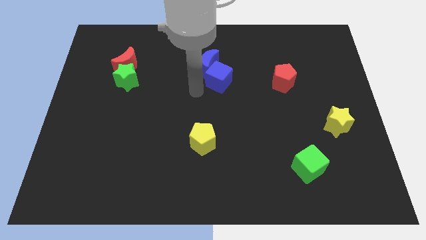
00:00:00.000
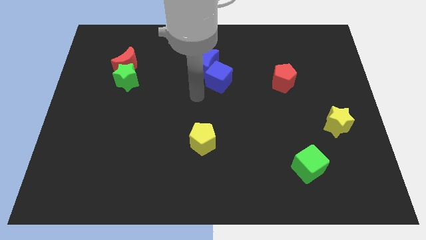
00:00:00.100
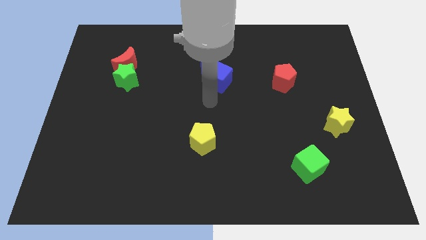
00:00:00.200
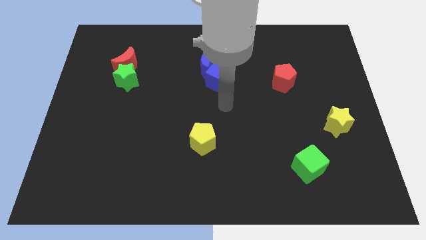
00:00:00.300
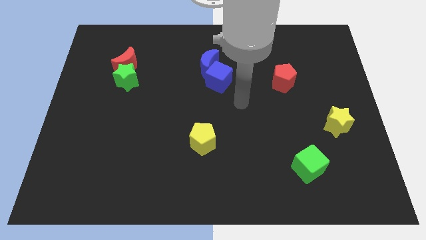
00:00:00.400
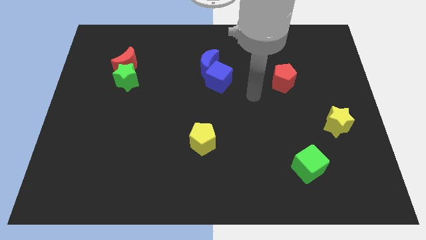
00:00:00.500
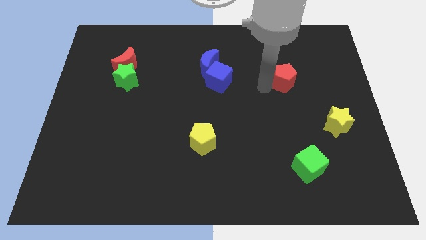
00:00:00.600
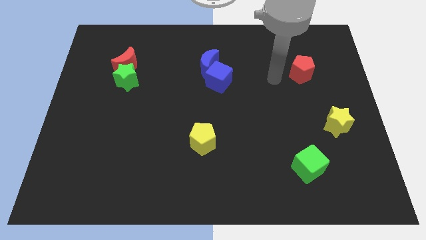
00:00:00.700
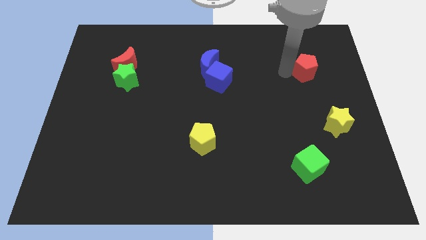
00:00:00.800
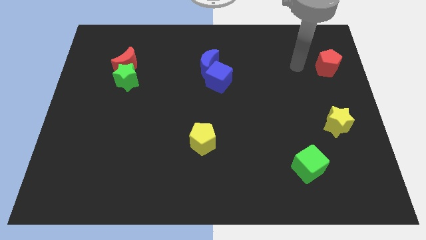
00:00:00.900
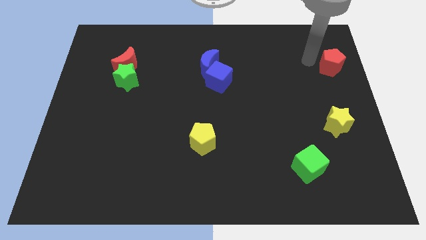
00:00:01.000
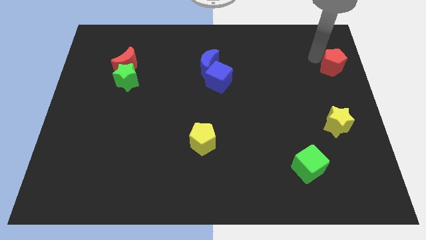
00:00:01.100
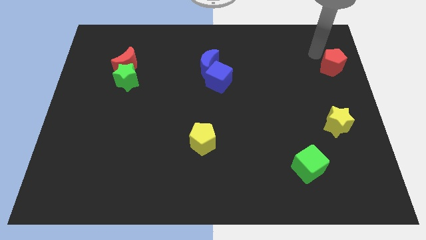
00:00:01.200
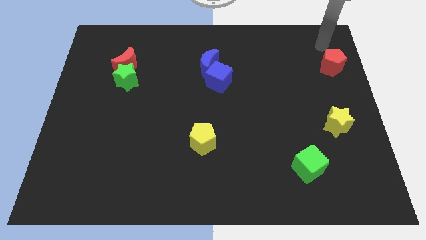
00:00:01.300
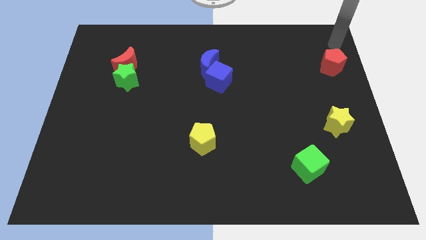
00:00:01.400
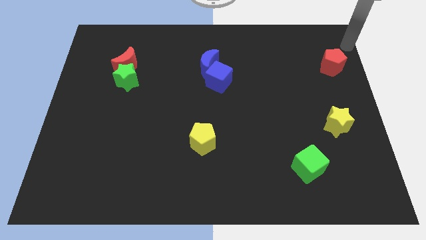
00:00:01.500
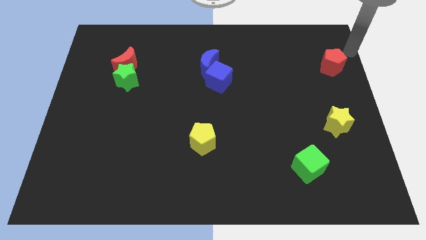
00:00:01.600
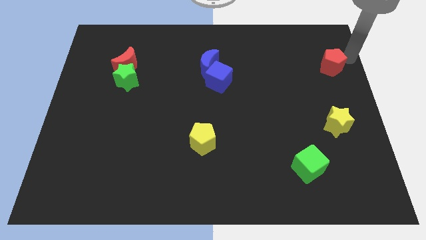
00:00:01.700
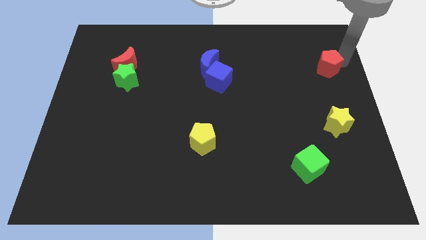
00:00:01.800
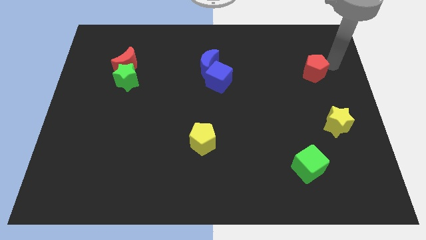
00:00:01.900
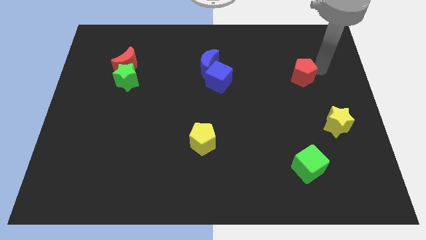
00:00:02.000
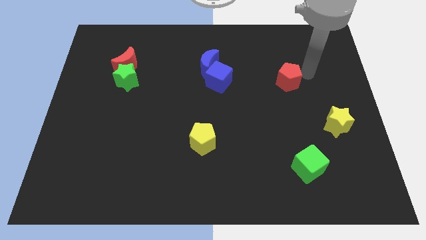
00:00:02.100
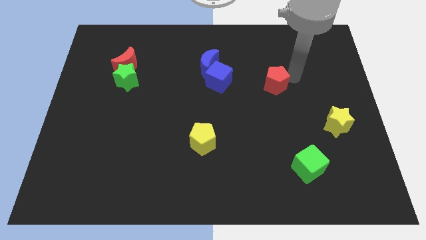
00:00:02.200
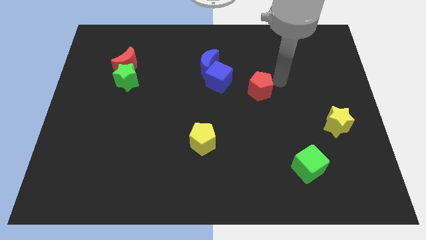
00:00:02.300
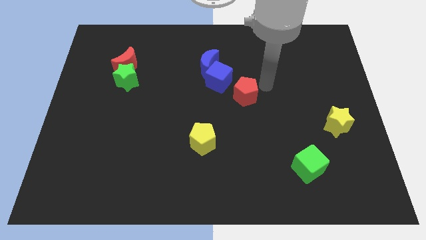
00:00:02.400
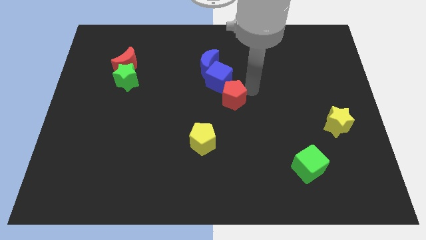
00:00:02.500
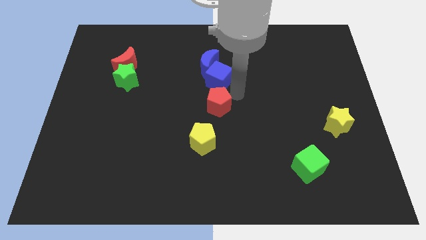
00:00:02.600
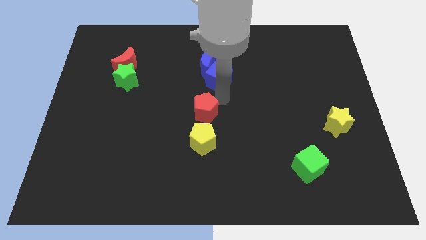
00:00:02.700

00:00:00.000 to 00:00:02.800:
push the red pentagon to the top of the yellow pentagon

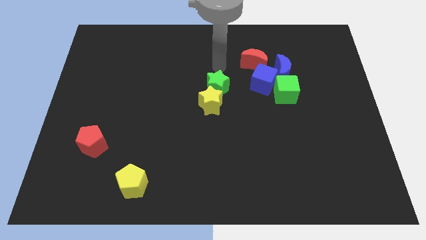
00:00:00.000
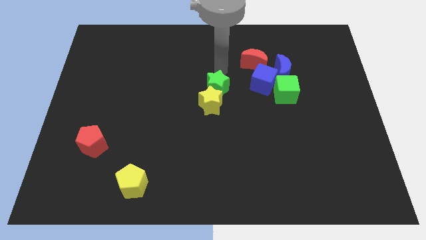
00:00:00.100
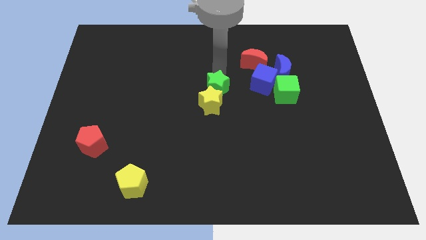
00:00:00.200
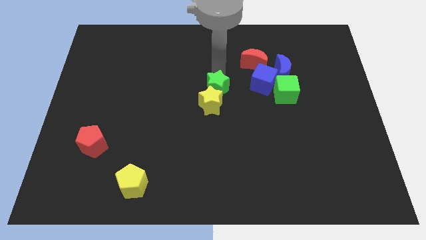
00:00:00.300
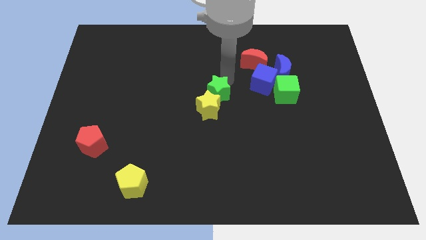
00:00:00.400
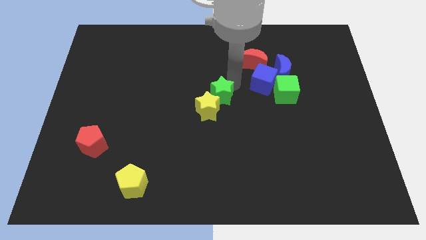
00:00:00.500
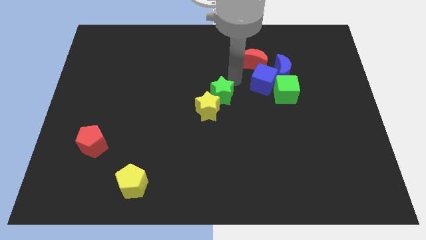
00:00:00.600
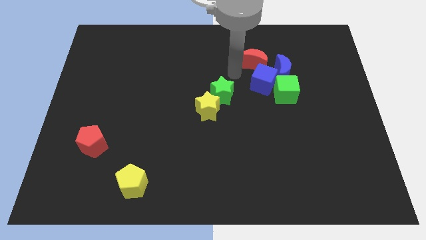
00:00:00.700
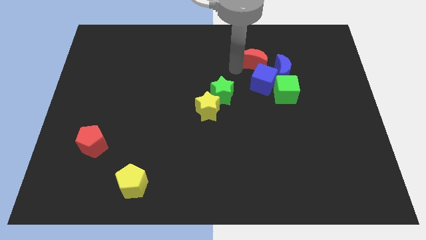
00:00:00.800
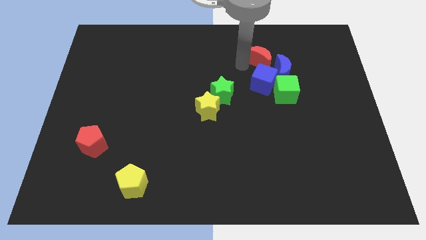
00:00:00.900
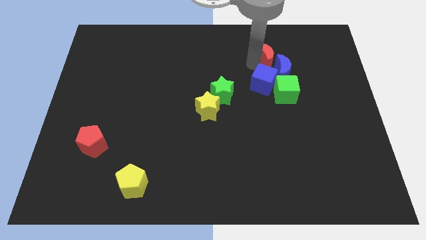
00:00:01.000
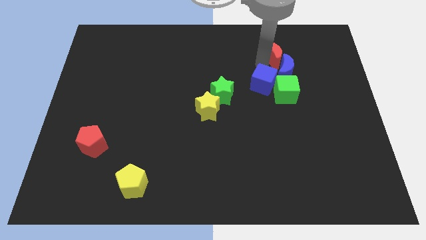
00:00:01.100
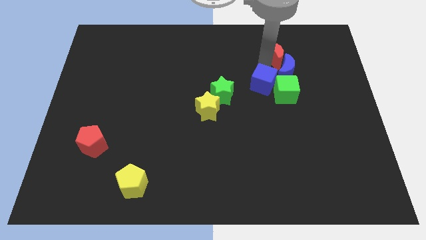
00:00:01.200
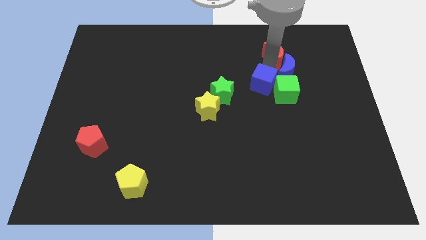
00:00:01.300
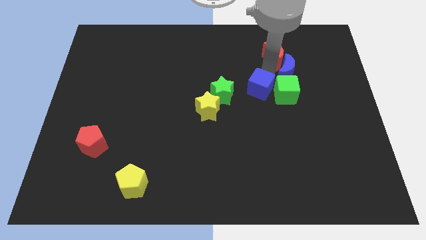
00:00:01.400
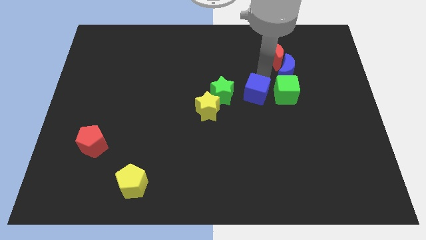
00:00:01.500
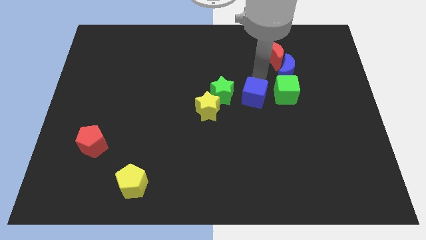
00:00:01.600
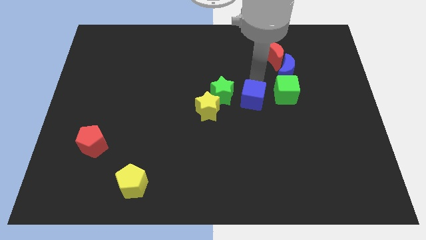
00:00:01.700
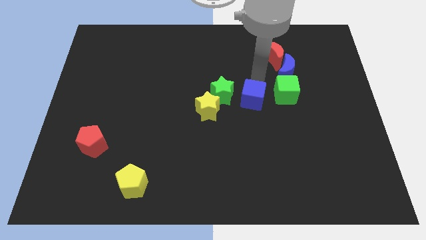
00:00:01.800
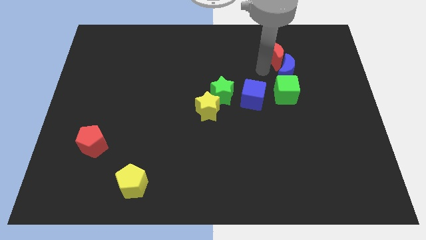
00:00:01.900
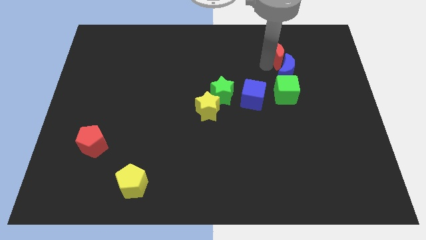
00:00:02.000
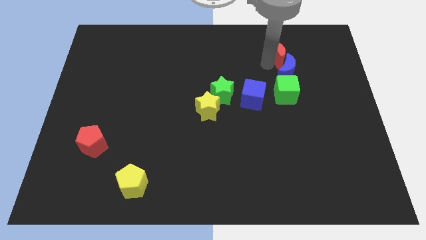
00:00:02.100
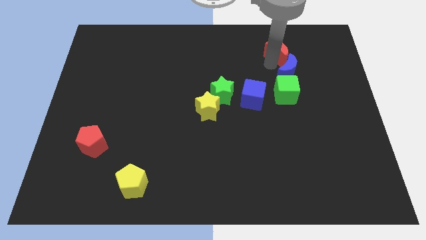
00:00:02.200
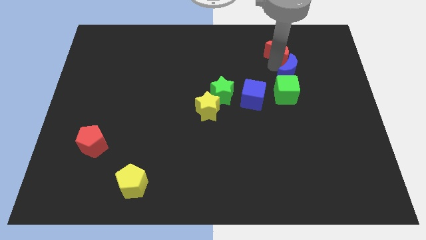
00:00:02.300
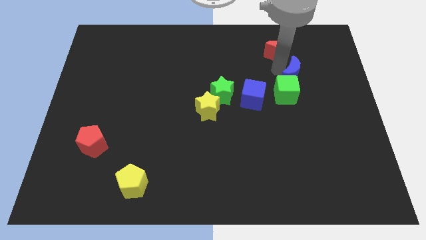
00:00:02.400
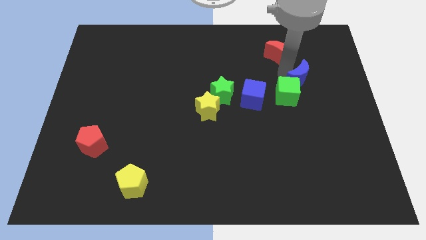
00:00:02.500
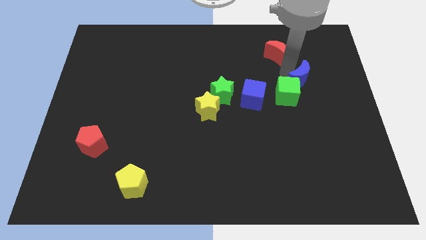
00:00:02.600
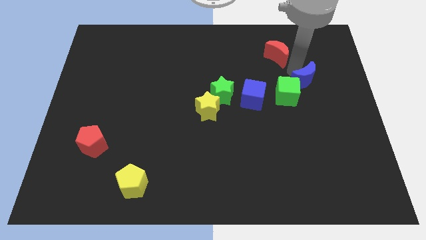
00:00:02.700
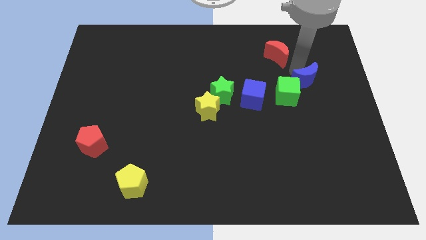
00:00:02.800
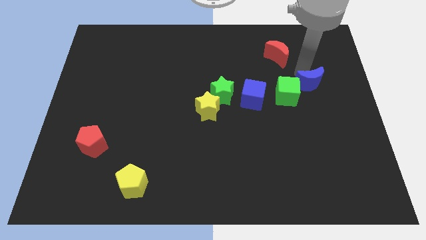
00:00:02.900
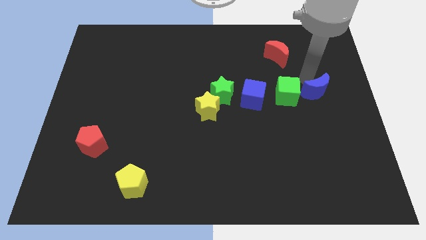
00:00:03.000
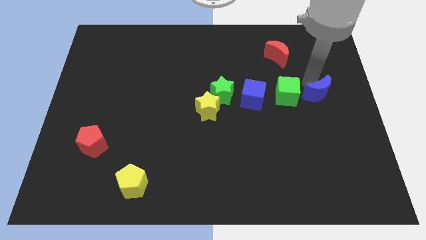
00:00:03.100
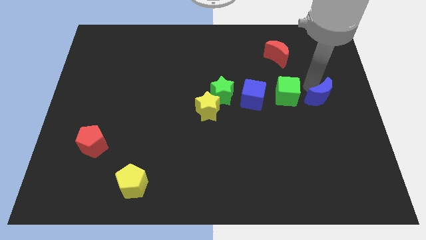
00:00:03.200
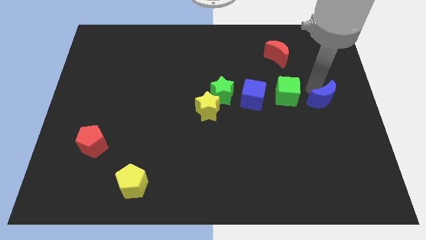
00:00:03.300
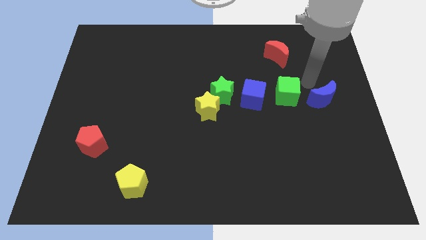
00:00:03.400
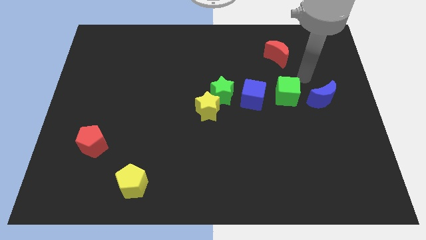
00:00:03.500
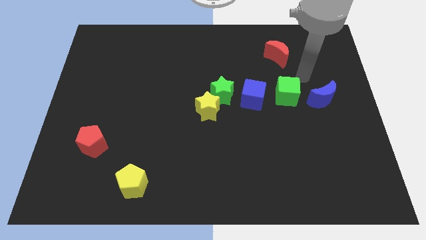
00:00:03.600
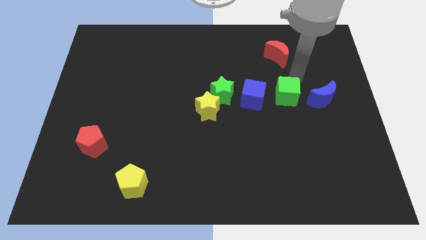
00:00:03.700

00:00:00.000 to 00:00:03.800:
push the red crescent slightly towards up

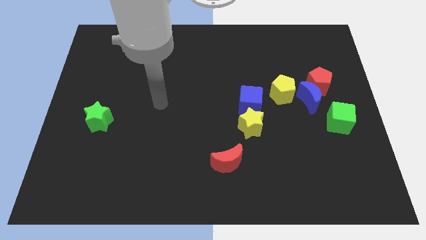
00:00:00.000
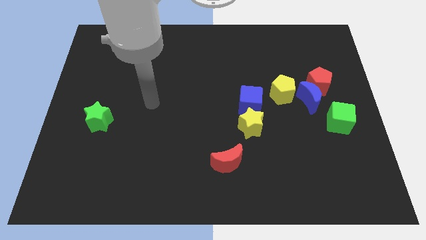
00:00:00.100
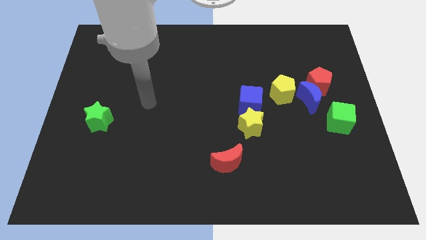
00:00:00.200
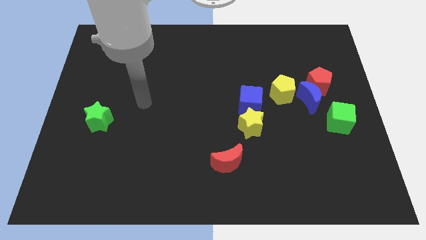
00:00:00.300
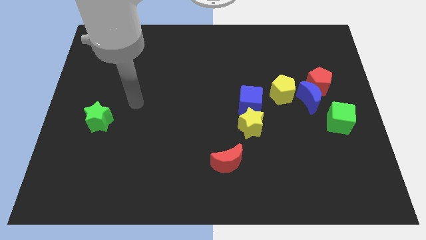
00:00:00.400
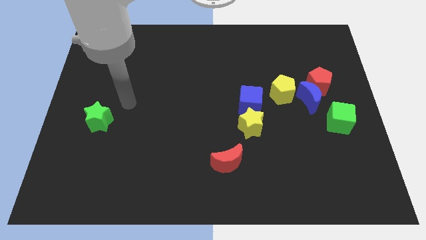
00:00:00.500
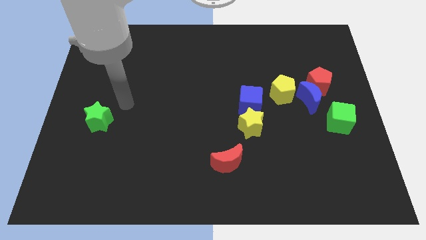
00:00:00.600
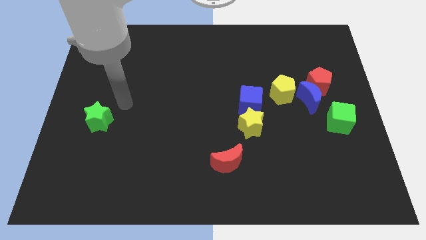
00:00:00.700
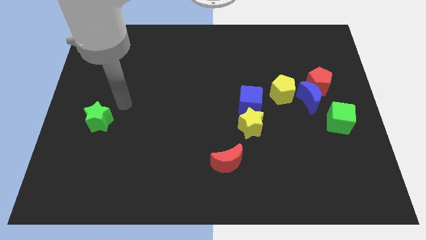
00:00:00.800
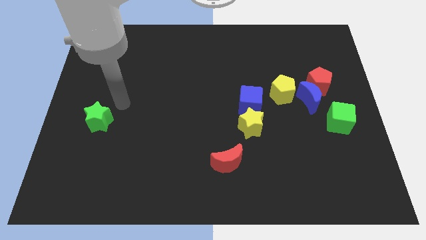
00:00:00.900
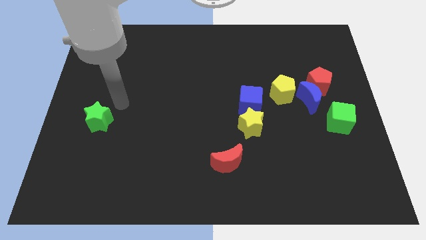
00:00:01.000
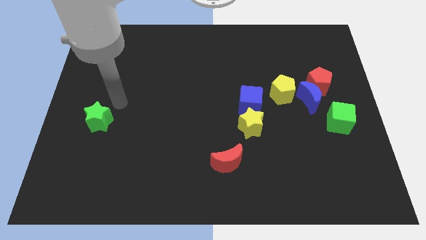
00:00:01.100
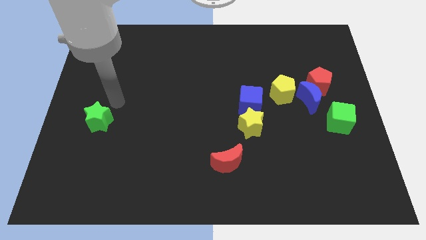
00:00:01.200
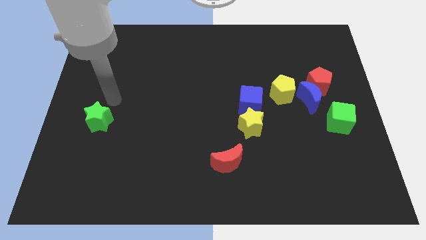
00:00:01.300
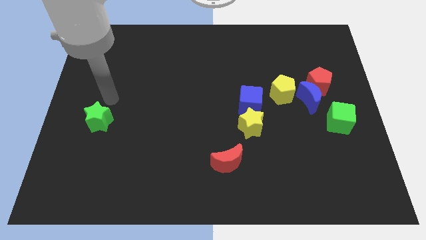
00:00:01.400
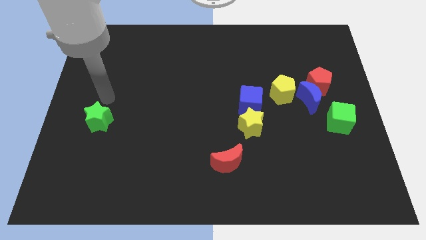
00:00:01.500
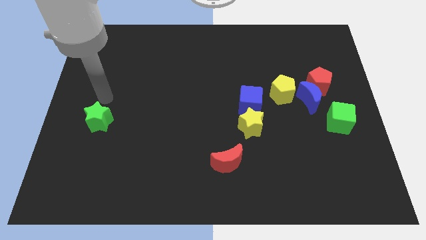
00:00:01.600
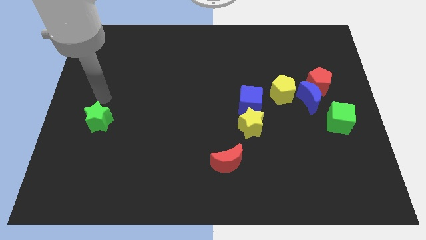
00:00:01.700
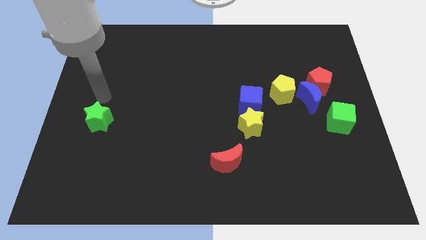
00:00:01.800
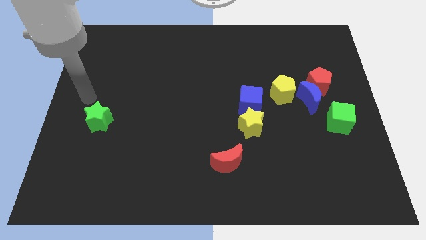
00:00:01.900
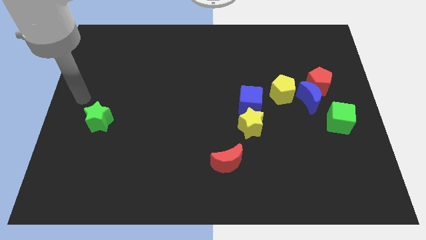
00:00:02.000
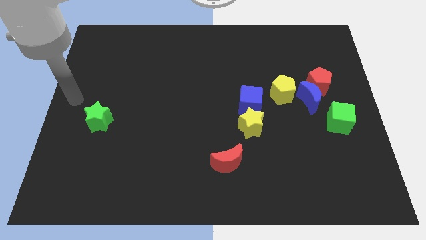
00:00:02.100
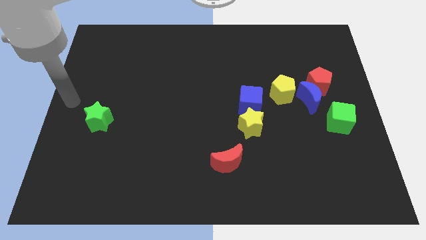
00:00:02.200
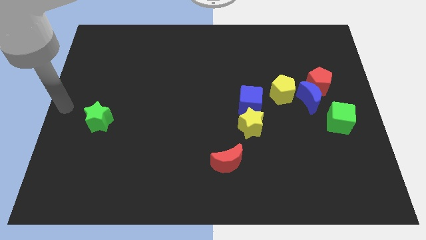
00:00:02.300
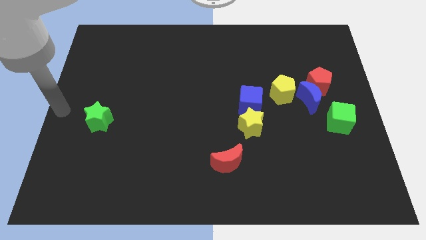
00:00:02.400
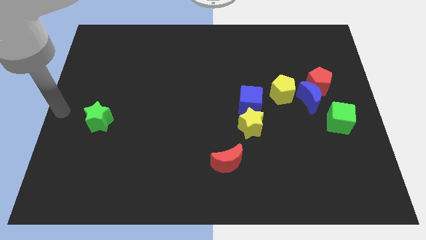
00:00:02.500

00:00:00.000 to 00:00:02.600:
put your hand at the center left of the board
